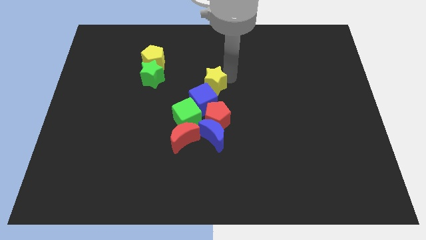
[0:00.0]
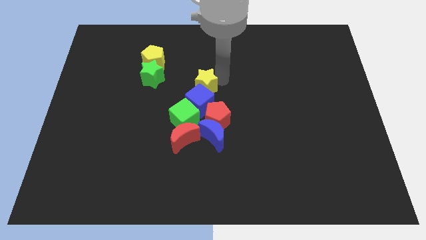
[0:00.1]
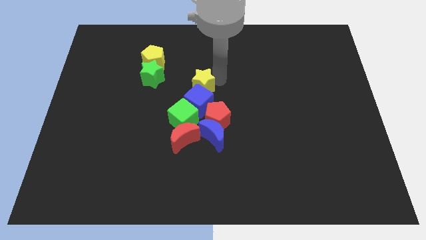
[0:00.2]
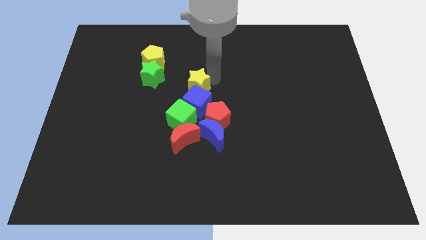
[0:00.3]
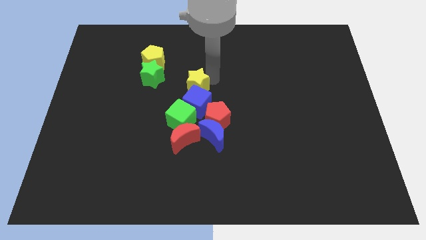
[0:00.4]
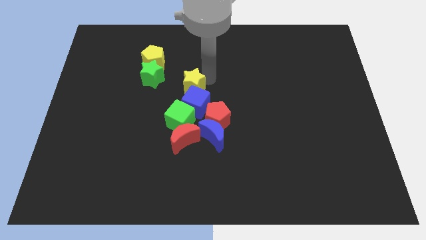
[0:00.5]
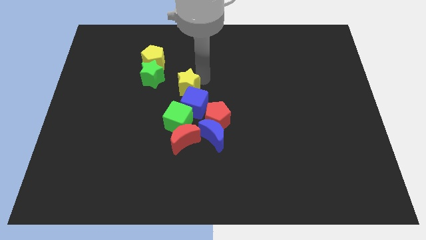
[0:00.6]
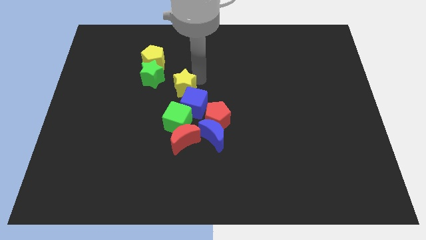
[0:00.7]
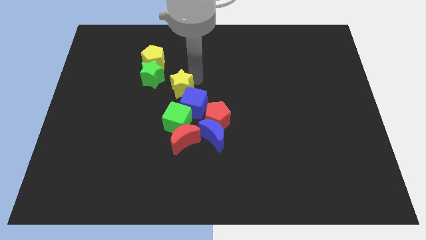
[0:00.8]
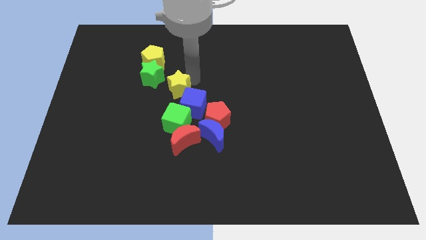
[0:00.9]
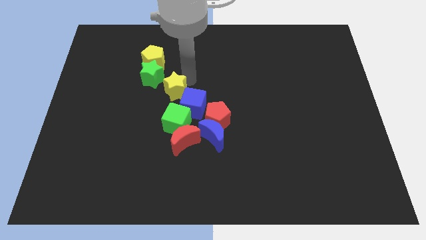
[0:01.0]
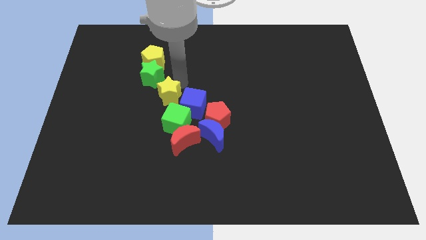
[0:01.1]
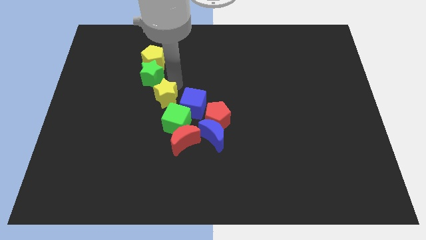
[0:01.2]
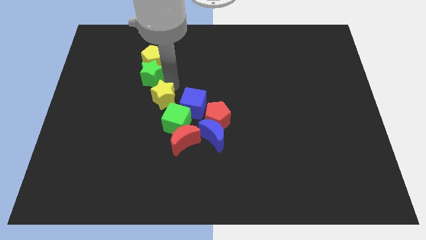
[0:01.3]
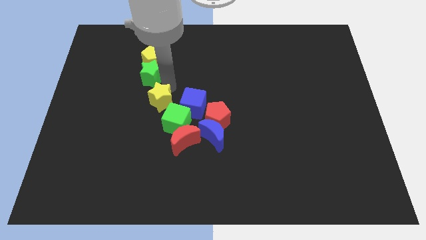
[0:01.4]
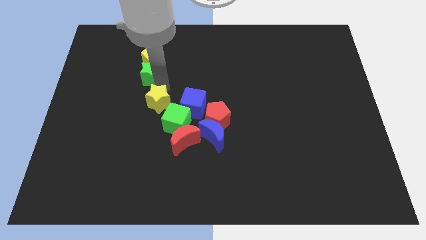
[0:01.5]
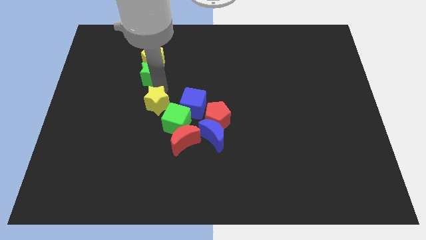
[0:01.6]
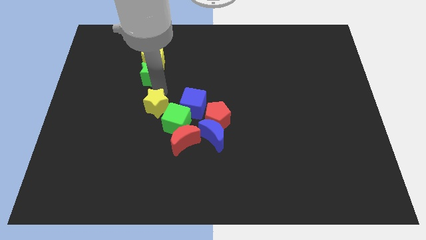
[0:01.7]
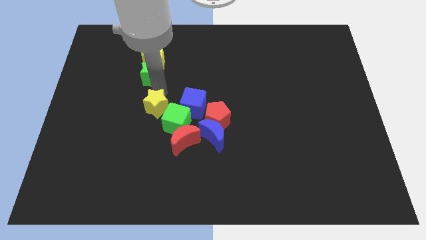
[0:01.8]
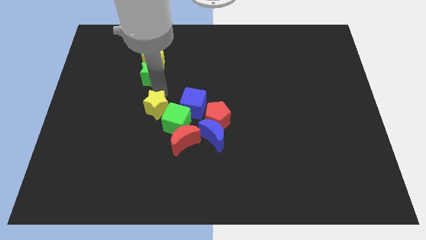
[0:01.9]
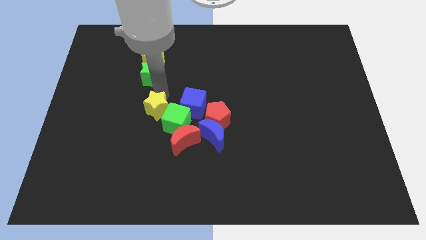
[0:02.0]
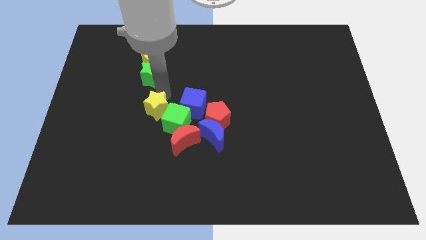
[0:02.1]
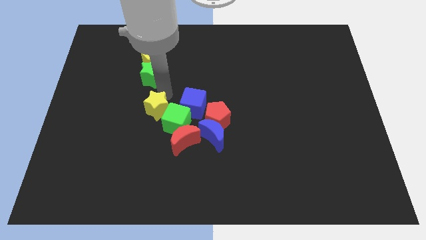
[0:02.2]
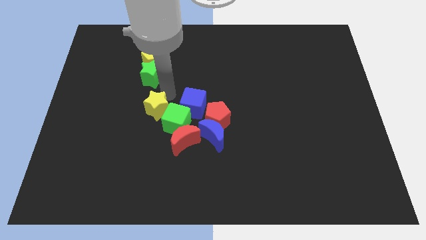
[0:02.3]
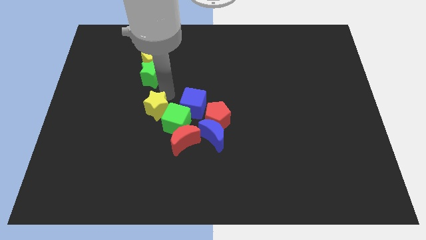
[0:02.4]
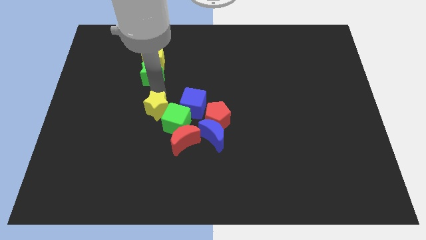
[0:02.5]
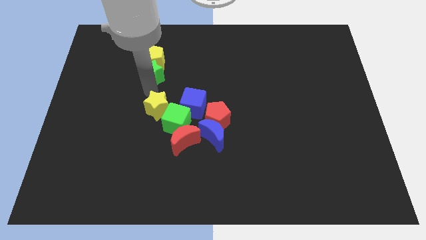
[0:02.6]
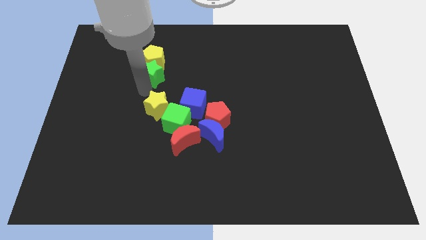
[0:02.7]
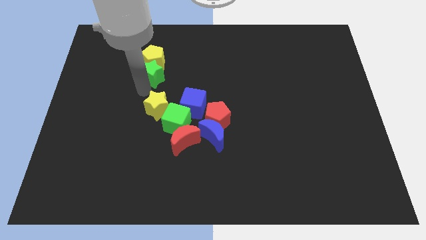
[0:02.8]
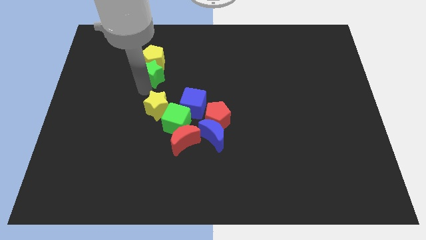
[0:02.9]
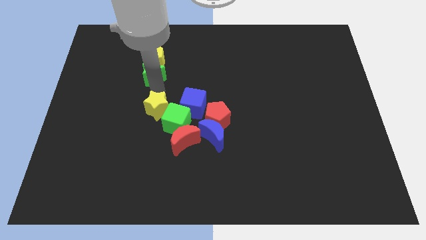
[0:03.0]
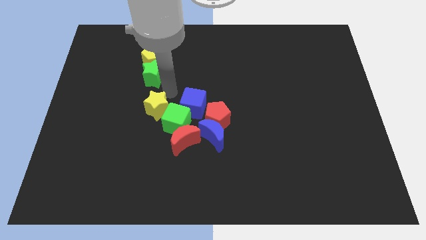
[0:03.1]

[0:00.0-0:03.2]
place yellow star beside green cube

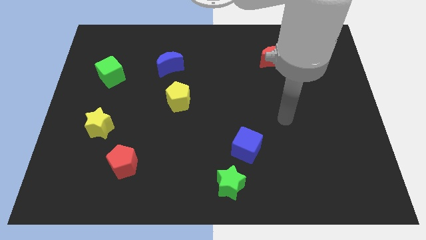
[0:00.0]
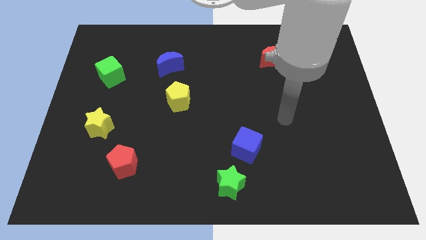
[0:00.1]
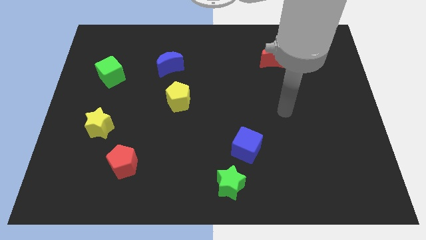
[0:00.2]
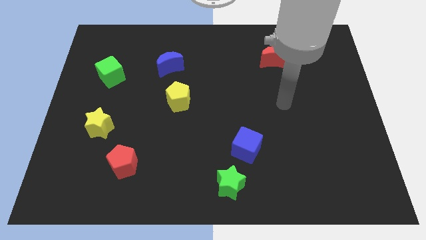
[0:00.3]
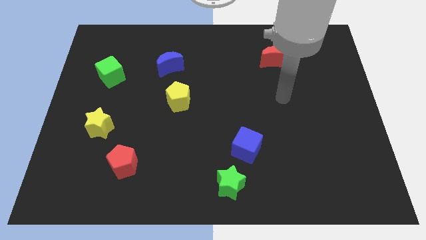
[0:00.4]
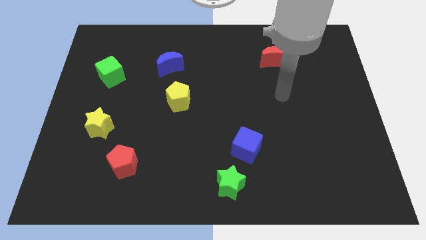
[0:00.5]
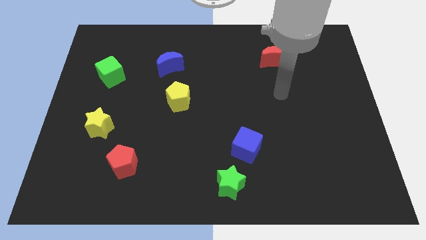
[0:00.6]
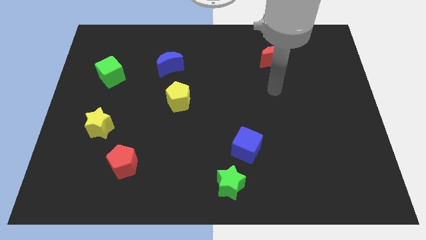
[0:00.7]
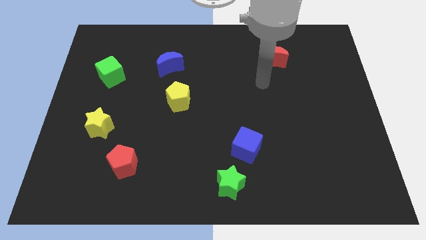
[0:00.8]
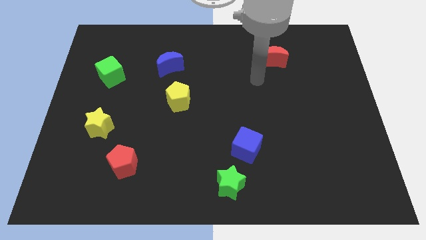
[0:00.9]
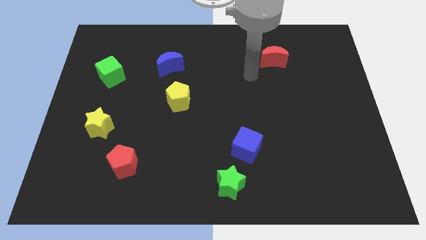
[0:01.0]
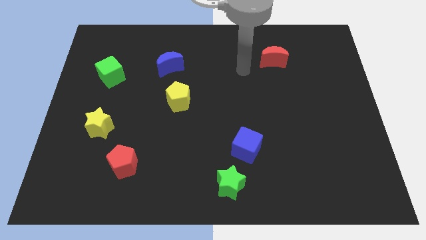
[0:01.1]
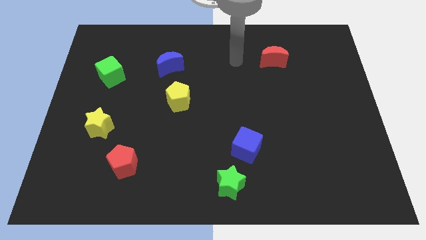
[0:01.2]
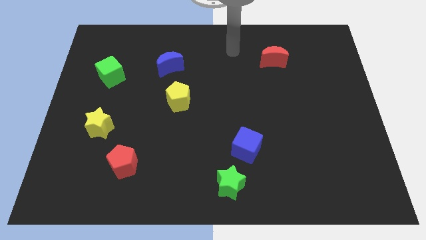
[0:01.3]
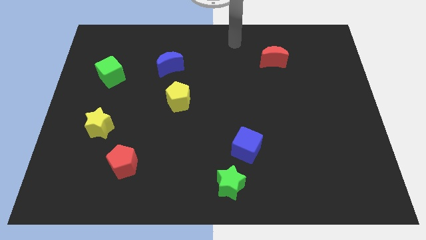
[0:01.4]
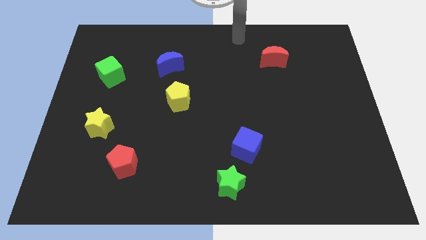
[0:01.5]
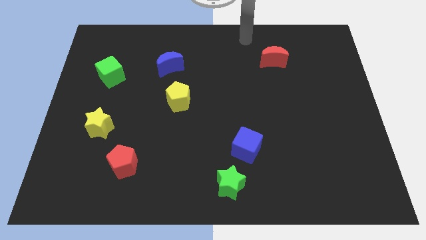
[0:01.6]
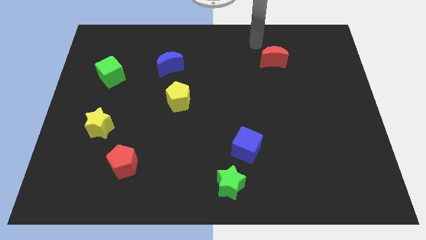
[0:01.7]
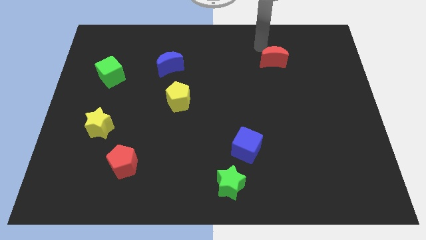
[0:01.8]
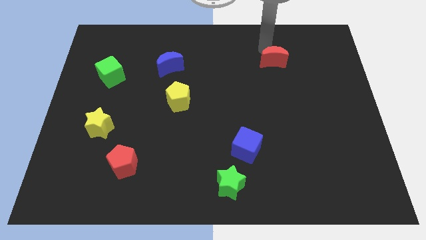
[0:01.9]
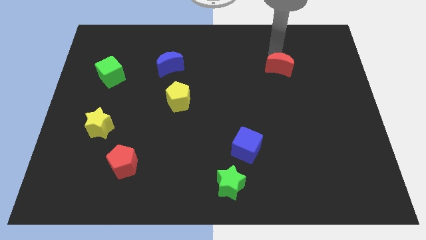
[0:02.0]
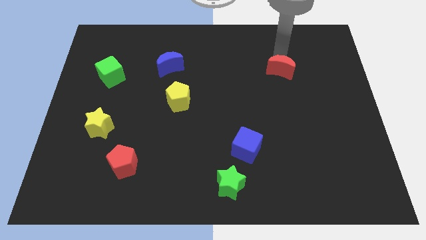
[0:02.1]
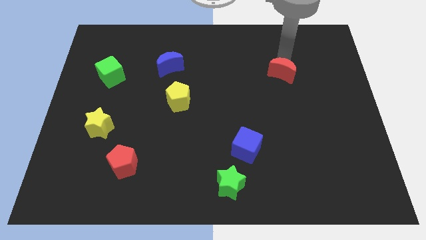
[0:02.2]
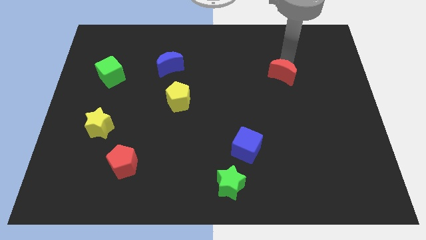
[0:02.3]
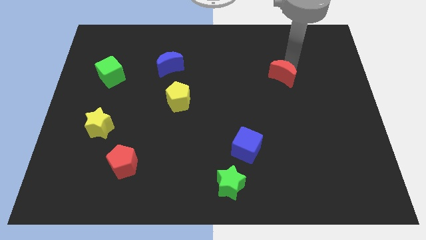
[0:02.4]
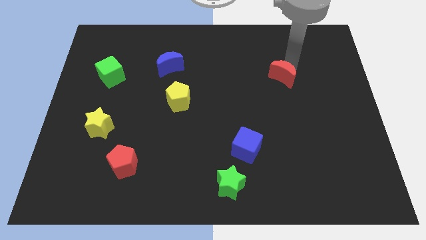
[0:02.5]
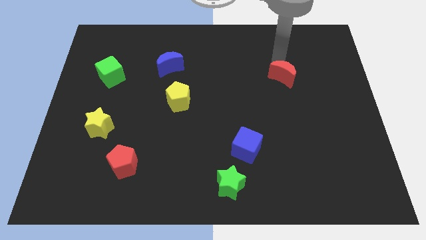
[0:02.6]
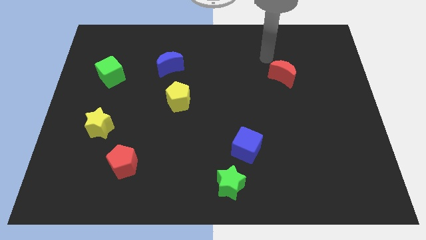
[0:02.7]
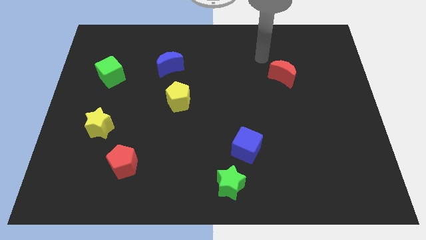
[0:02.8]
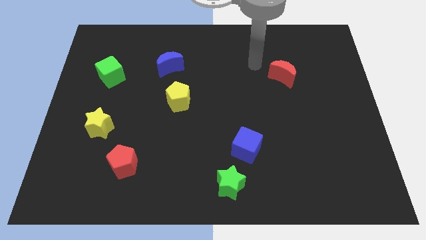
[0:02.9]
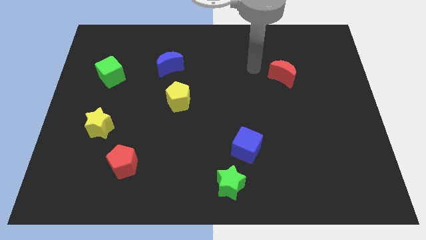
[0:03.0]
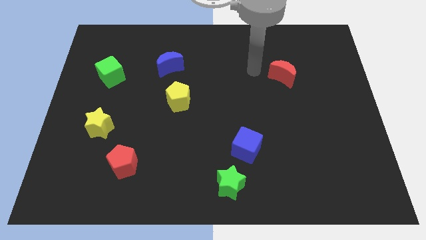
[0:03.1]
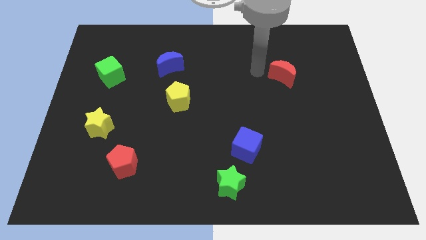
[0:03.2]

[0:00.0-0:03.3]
push the red crescent slightly to the bottom

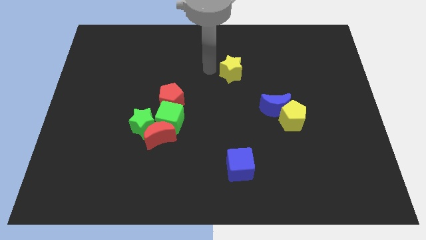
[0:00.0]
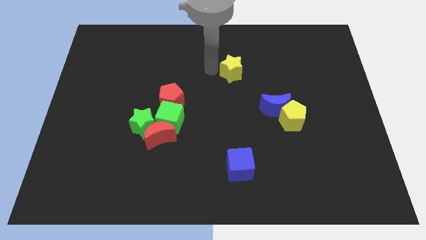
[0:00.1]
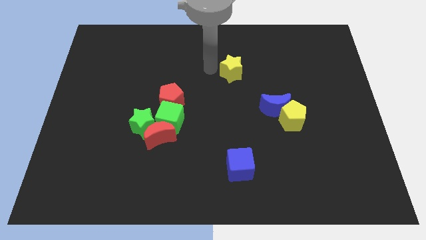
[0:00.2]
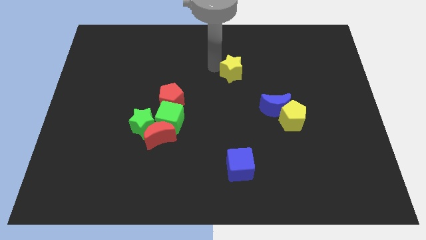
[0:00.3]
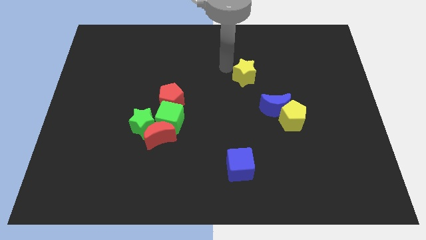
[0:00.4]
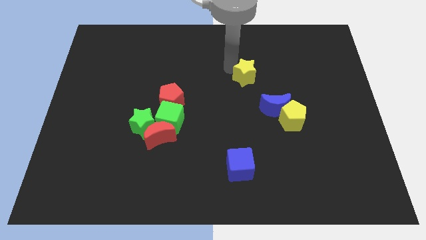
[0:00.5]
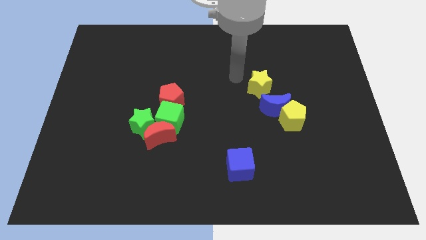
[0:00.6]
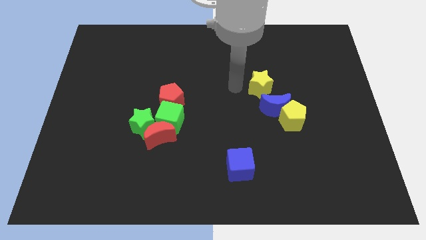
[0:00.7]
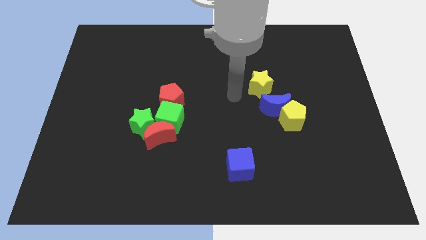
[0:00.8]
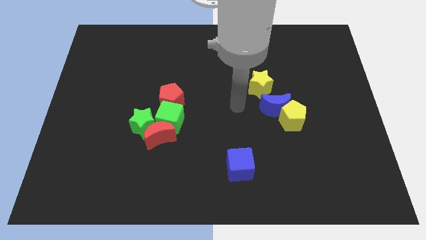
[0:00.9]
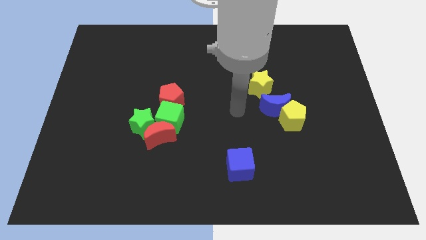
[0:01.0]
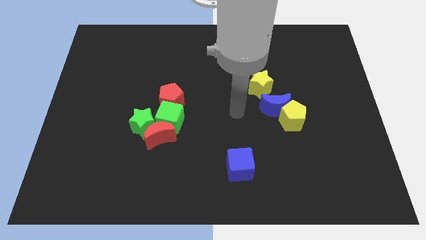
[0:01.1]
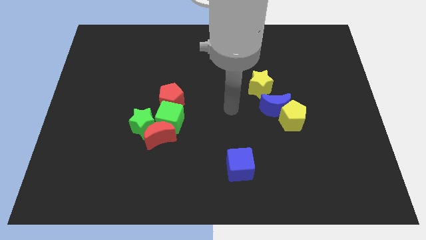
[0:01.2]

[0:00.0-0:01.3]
push yellow star into the blue moon

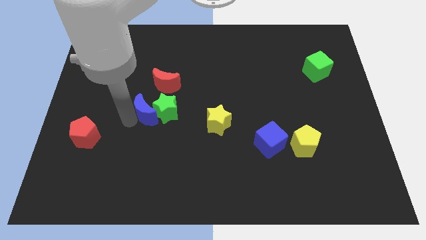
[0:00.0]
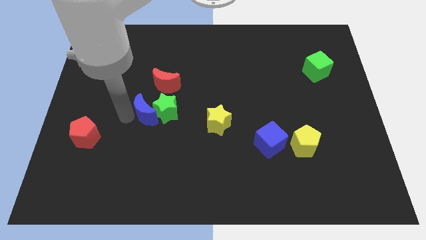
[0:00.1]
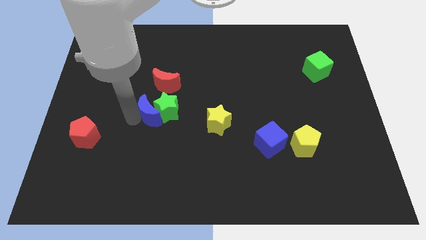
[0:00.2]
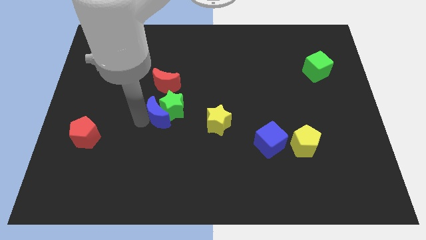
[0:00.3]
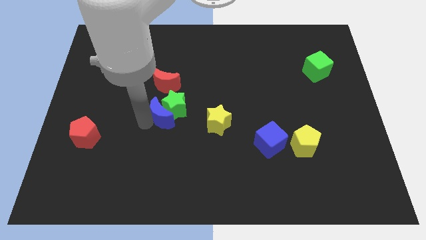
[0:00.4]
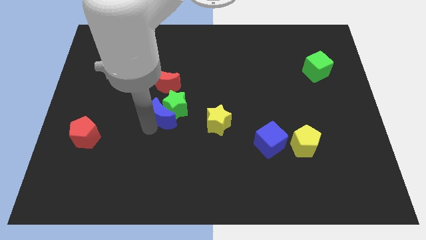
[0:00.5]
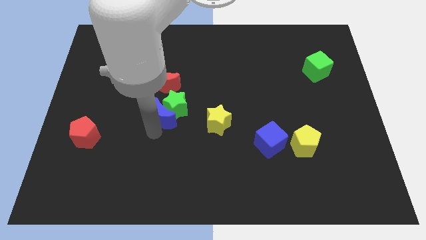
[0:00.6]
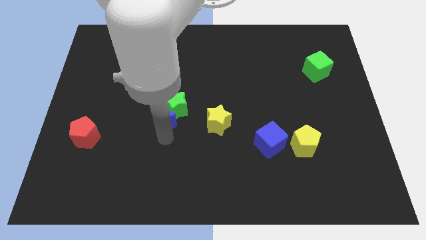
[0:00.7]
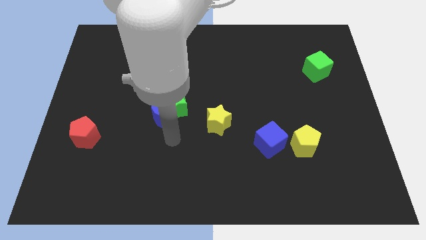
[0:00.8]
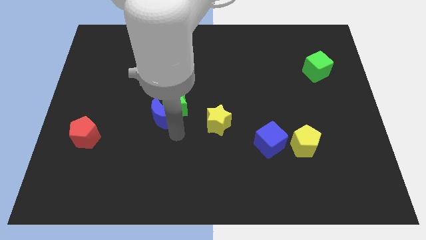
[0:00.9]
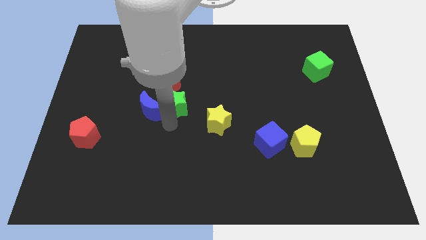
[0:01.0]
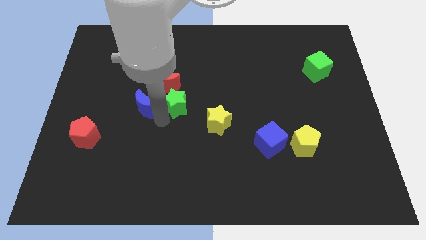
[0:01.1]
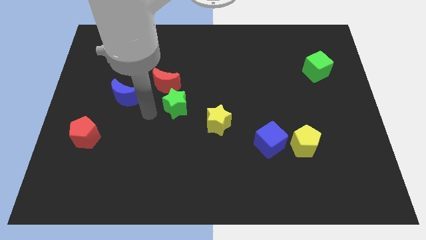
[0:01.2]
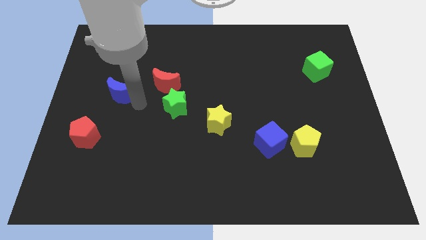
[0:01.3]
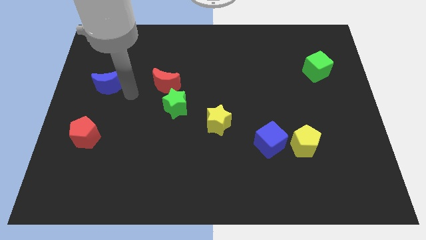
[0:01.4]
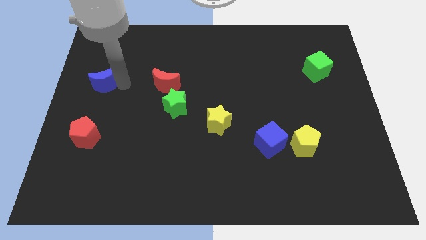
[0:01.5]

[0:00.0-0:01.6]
place the blue moon to the left of red moon
